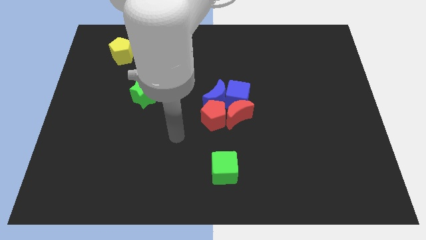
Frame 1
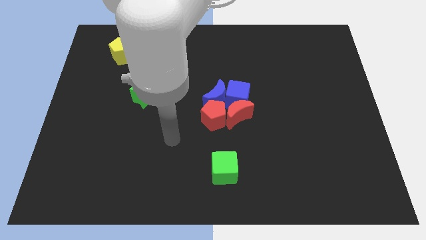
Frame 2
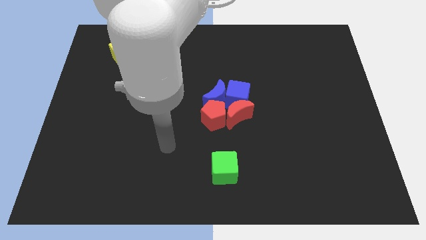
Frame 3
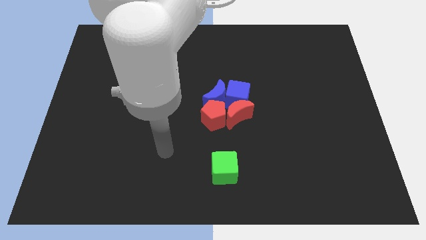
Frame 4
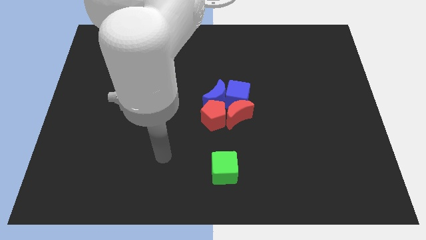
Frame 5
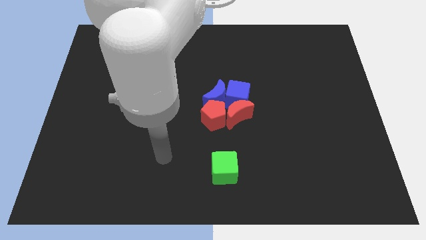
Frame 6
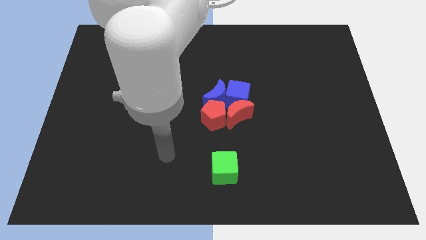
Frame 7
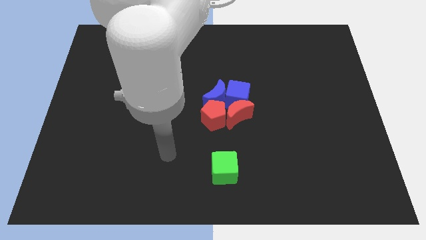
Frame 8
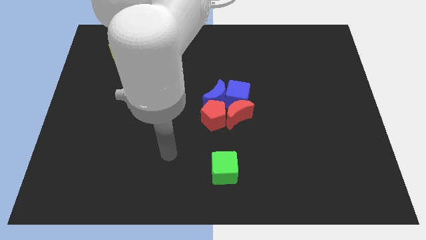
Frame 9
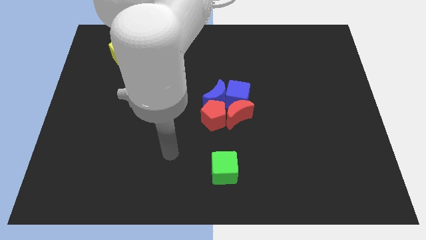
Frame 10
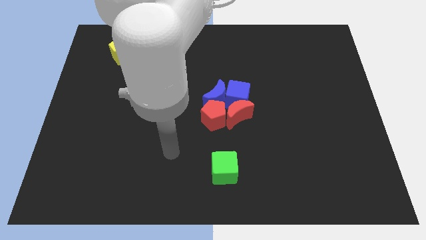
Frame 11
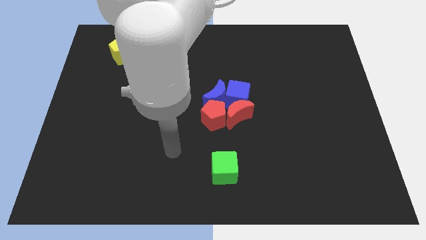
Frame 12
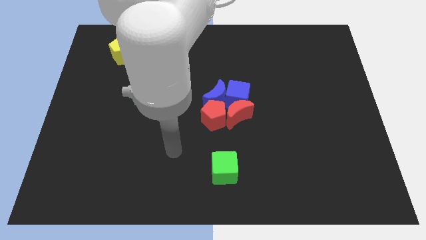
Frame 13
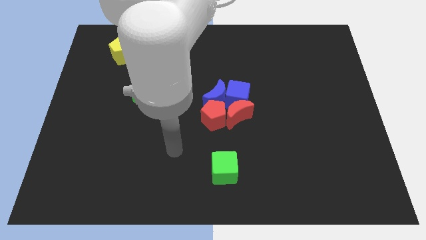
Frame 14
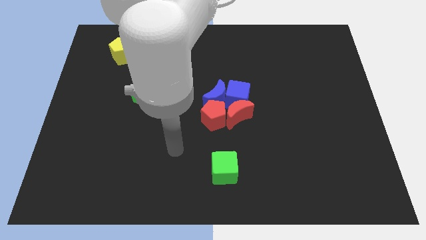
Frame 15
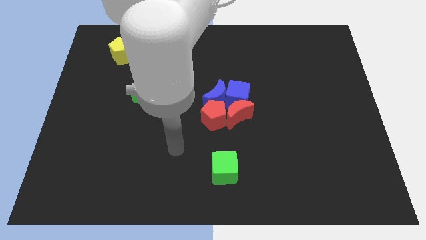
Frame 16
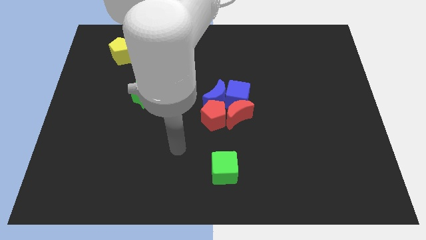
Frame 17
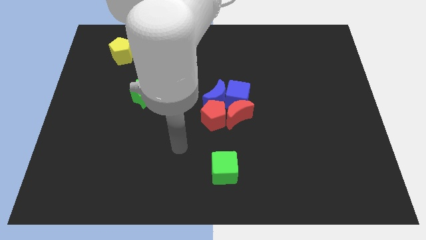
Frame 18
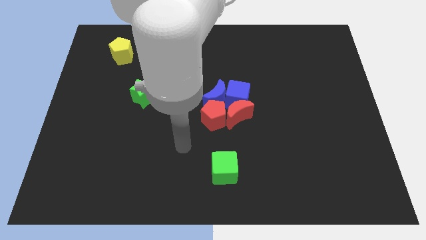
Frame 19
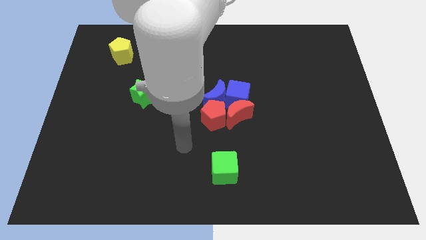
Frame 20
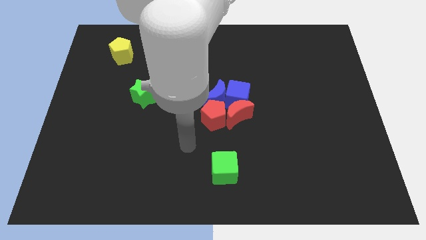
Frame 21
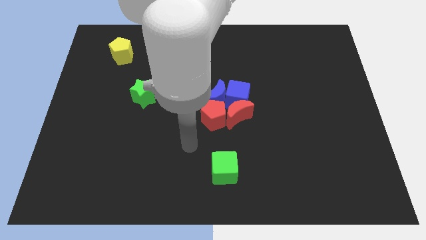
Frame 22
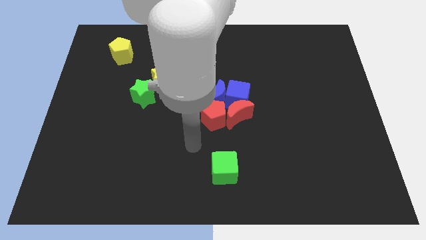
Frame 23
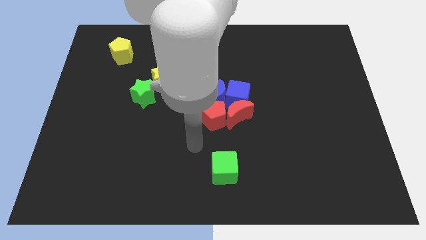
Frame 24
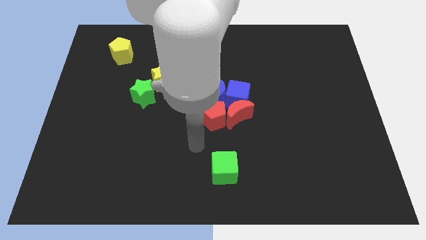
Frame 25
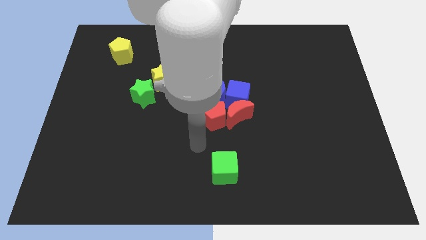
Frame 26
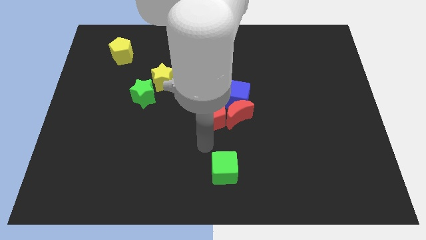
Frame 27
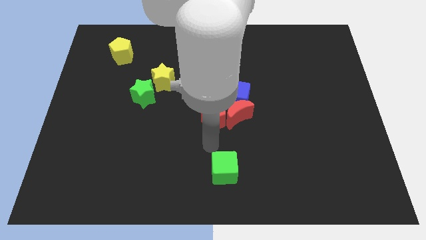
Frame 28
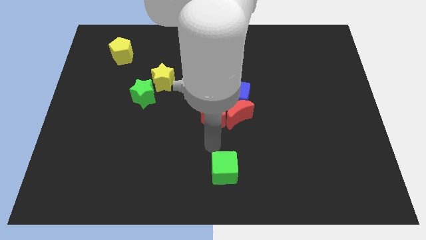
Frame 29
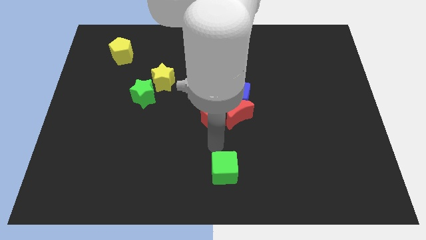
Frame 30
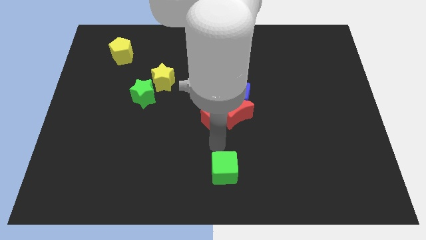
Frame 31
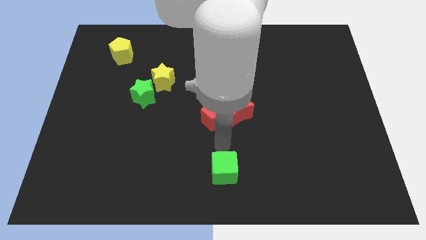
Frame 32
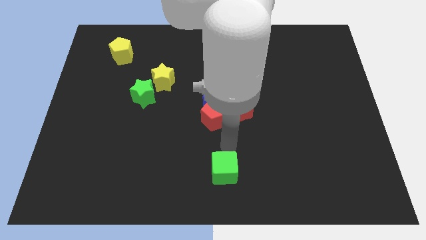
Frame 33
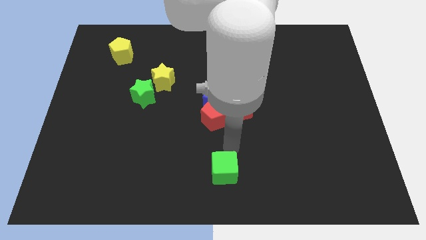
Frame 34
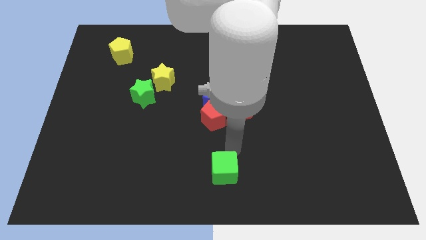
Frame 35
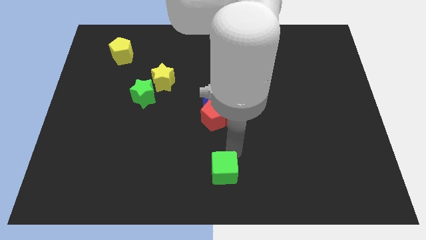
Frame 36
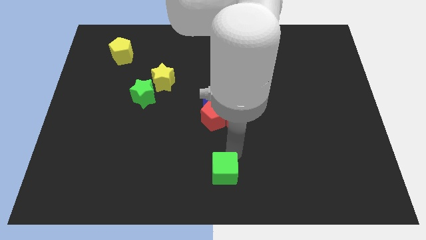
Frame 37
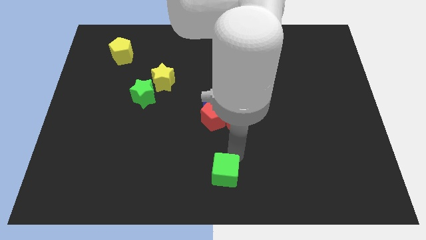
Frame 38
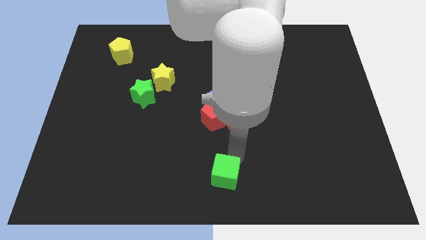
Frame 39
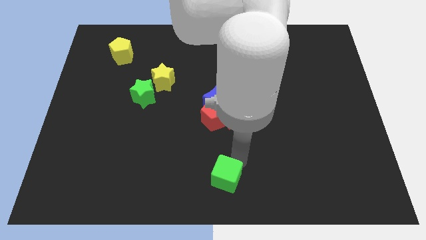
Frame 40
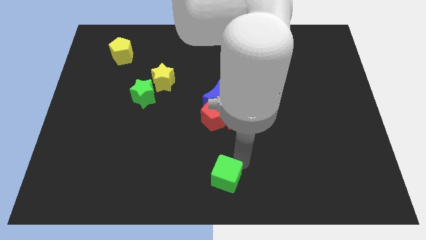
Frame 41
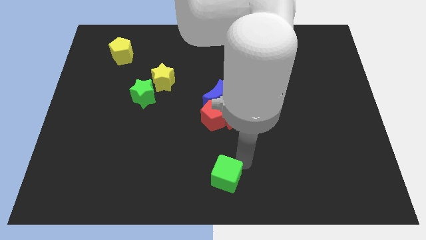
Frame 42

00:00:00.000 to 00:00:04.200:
slightly push the green cube to the bottom of the board

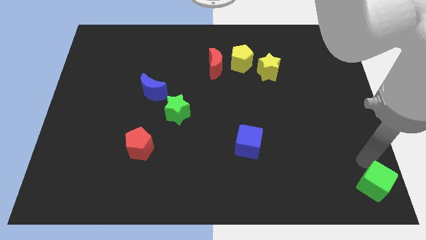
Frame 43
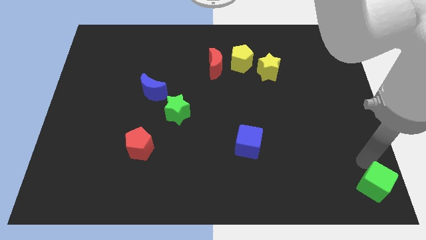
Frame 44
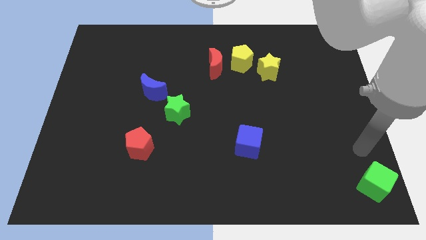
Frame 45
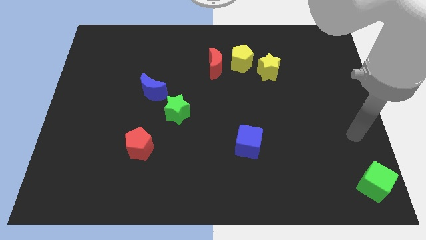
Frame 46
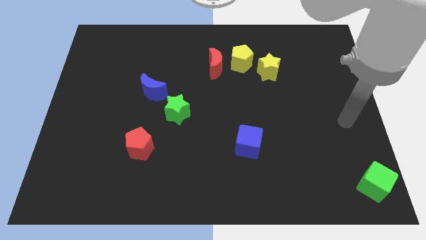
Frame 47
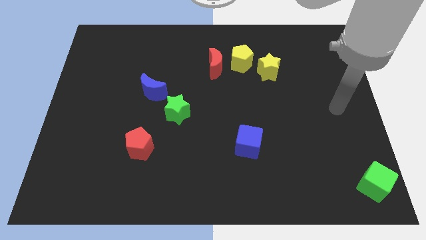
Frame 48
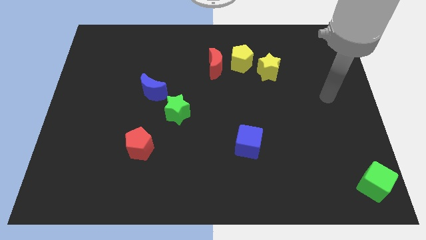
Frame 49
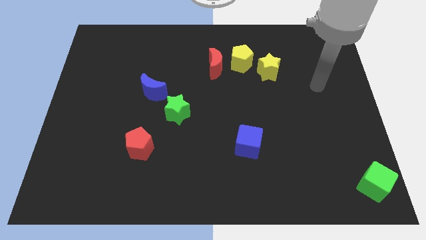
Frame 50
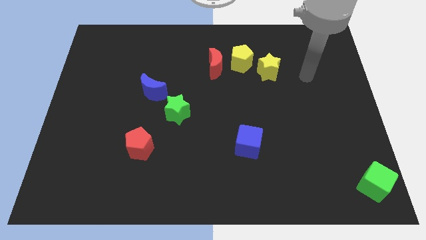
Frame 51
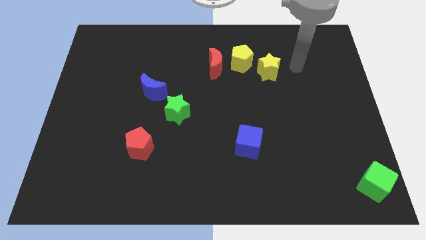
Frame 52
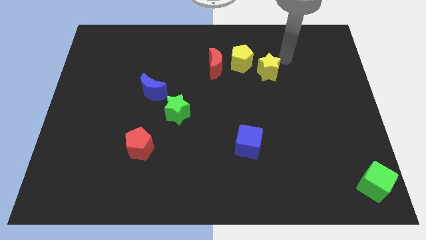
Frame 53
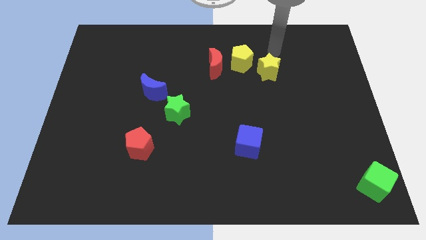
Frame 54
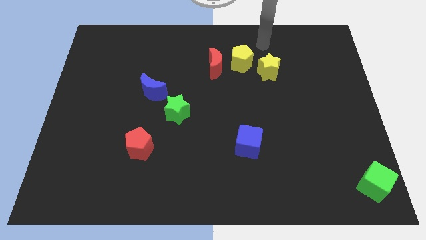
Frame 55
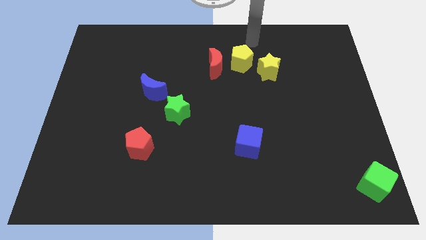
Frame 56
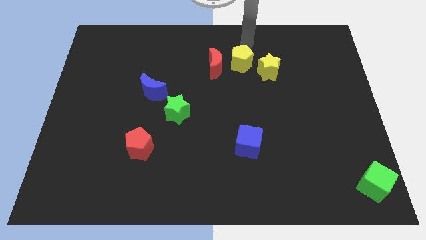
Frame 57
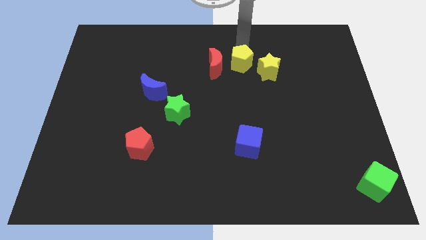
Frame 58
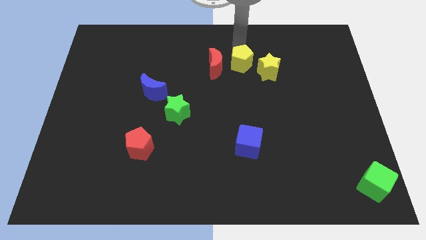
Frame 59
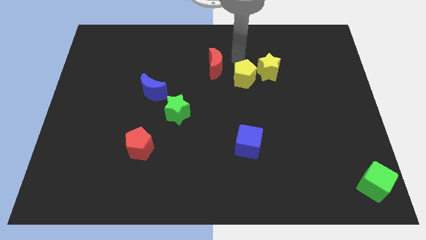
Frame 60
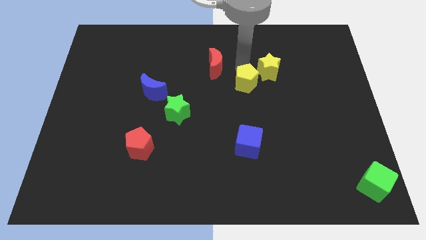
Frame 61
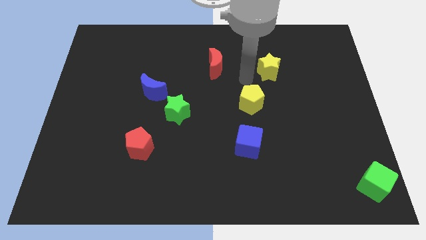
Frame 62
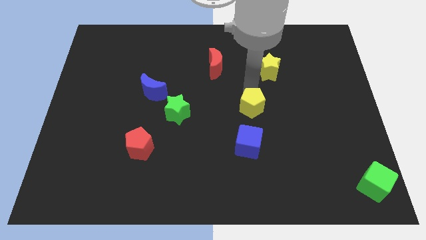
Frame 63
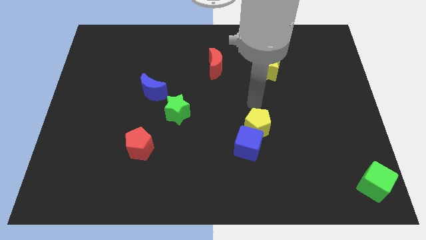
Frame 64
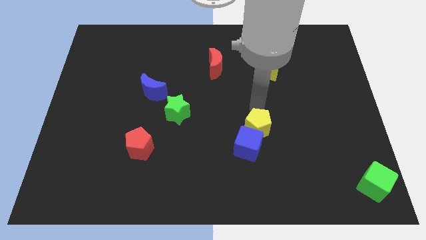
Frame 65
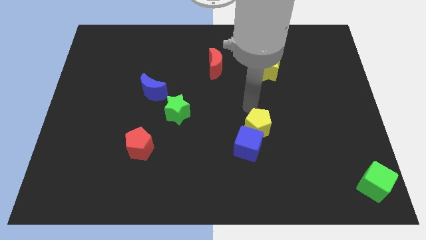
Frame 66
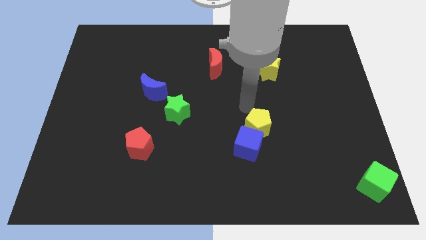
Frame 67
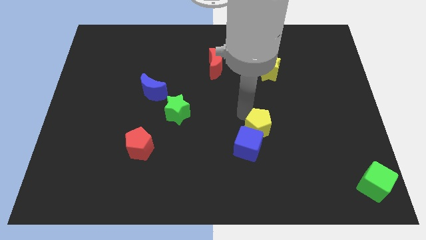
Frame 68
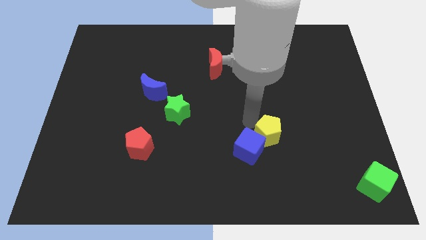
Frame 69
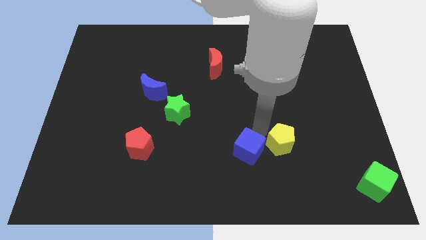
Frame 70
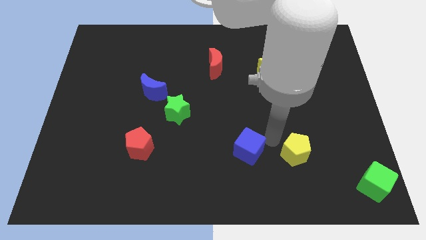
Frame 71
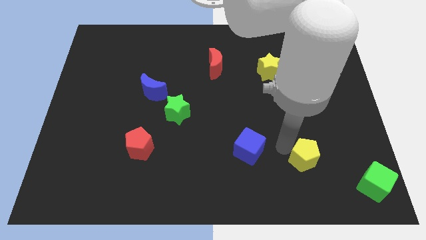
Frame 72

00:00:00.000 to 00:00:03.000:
push yellow pentagon beside blue cube

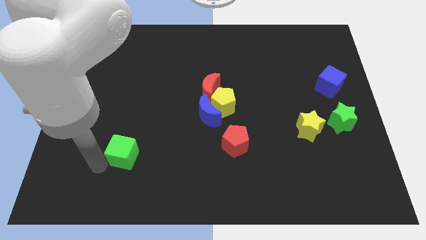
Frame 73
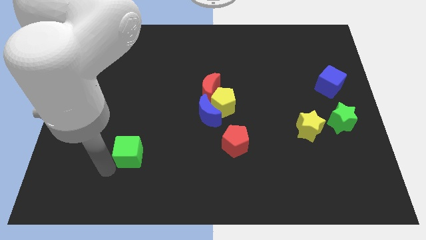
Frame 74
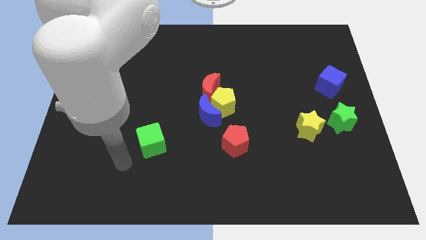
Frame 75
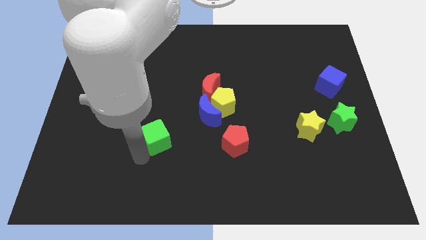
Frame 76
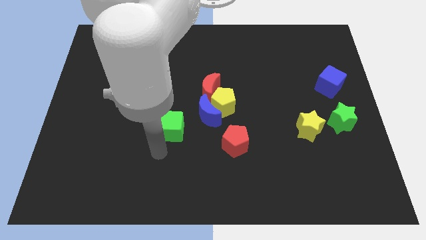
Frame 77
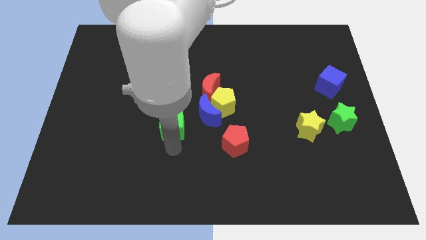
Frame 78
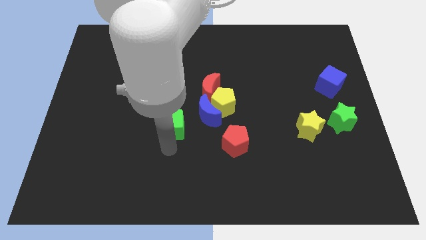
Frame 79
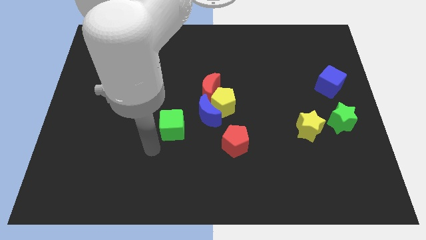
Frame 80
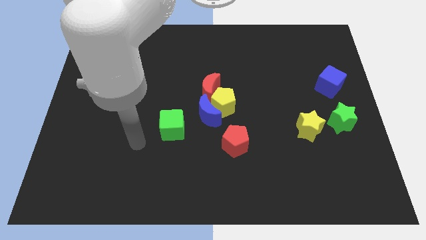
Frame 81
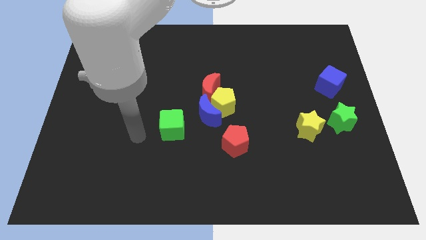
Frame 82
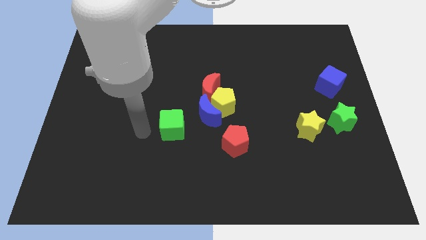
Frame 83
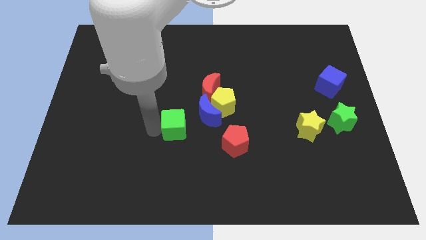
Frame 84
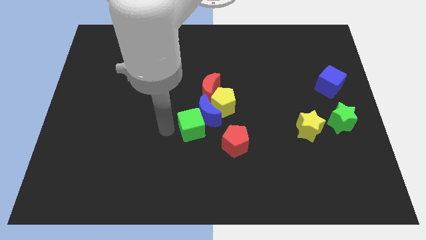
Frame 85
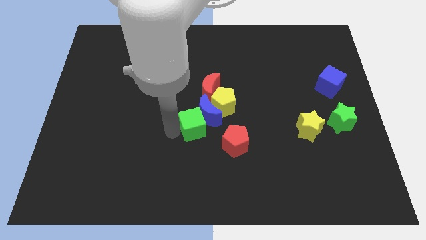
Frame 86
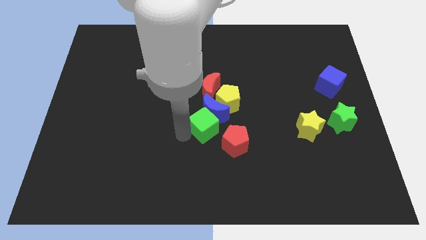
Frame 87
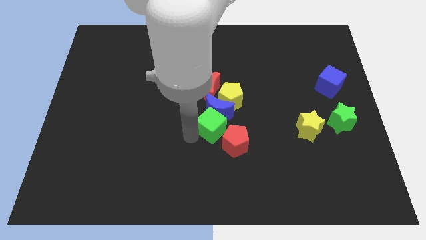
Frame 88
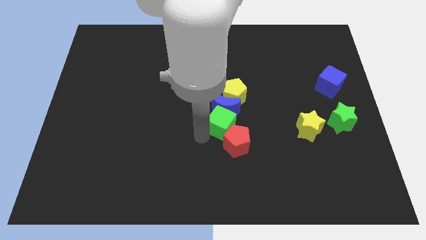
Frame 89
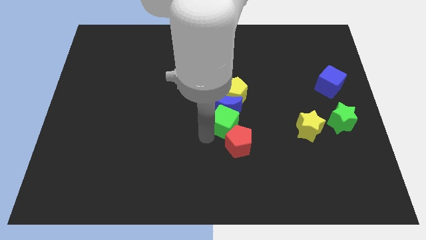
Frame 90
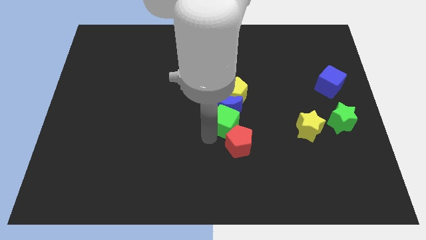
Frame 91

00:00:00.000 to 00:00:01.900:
move the green cube into the group of blocks
